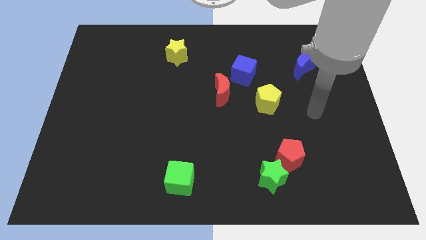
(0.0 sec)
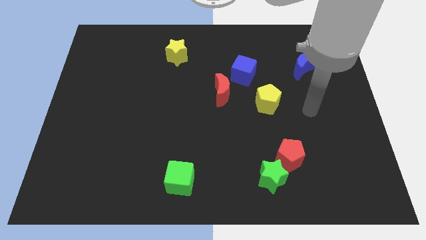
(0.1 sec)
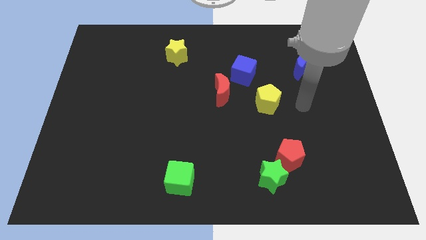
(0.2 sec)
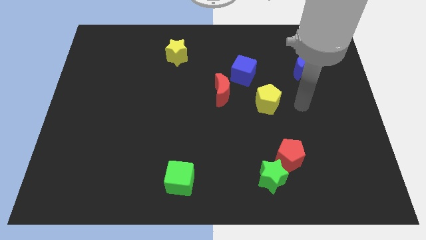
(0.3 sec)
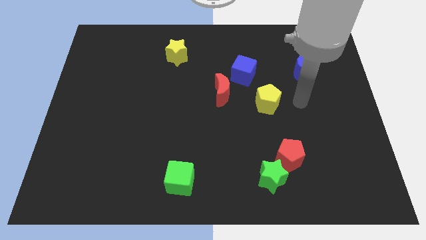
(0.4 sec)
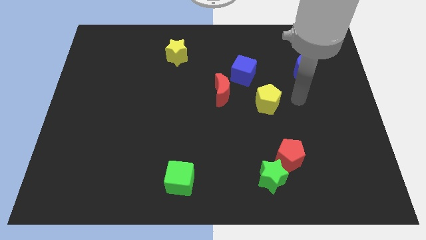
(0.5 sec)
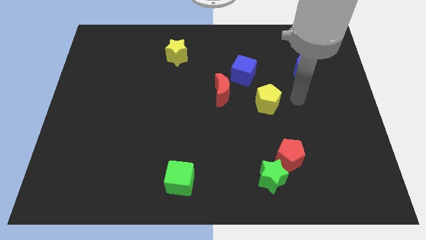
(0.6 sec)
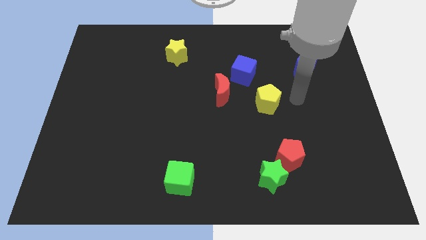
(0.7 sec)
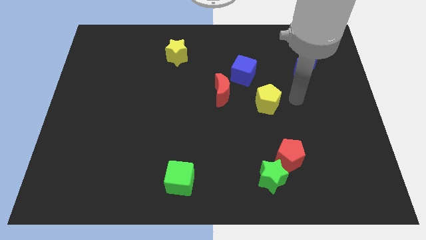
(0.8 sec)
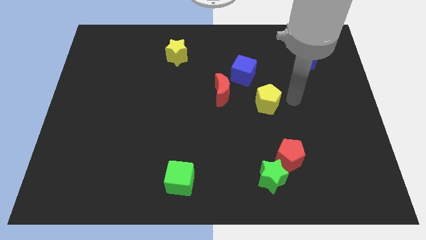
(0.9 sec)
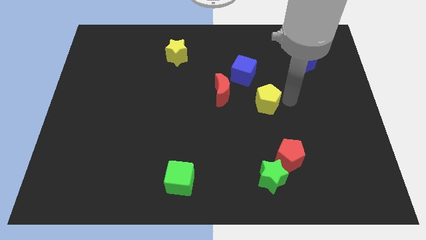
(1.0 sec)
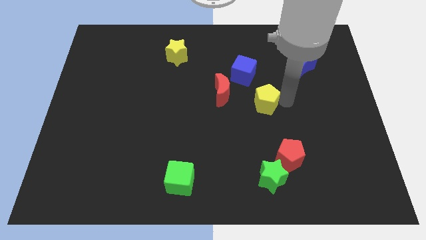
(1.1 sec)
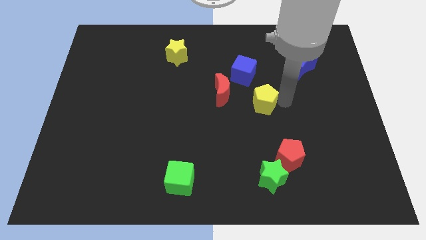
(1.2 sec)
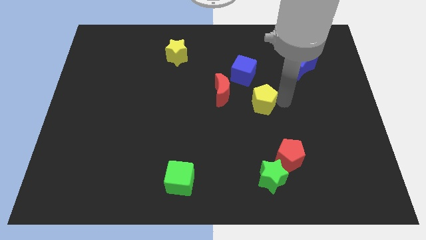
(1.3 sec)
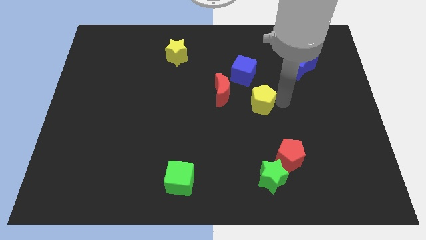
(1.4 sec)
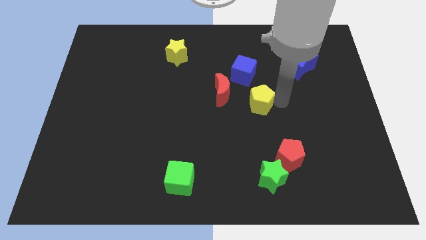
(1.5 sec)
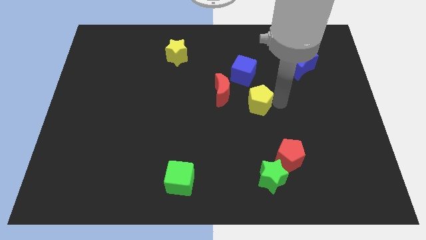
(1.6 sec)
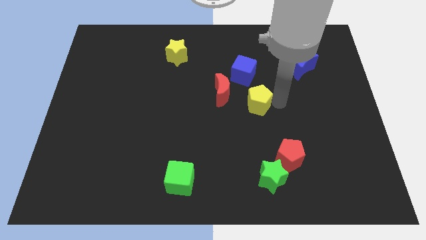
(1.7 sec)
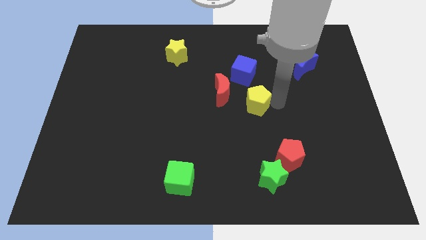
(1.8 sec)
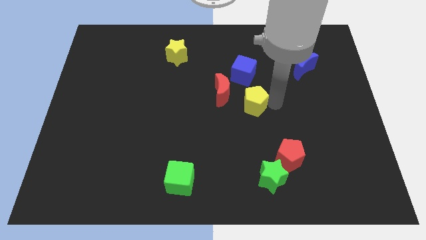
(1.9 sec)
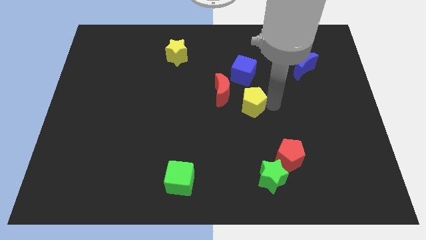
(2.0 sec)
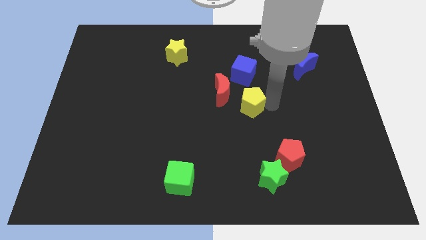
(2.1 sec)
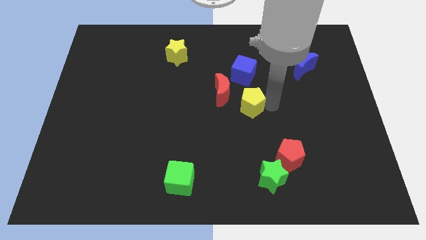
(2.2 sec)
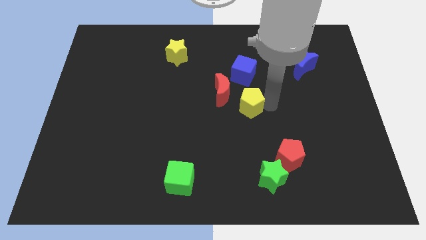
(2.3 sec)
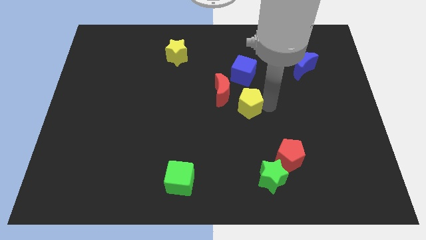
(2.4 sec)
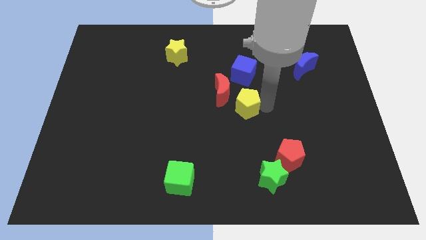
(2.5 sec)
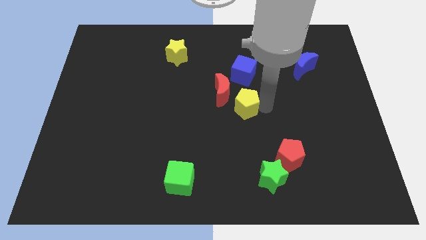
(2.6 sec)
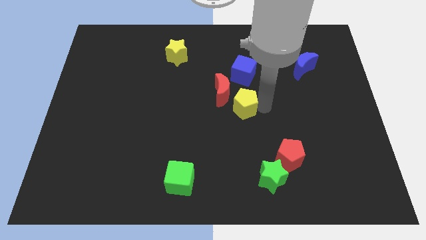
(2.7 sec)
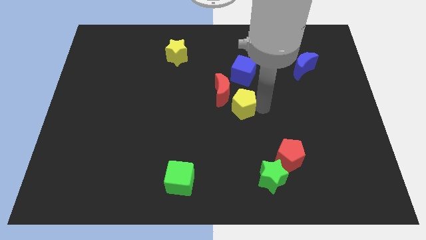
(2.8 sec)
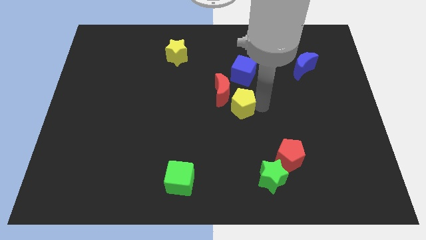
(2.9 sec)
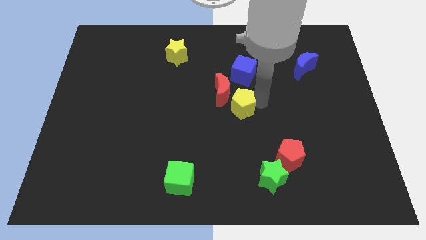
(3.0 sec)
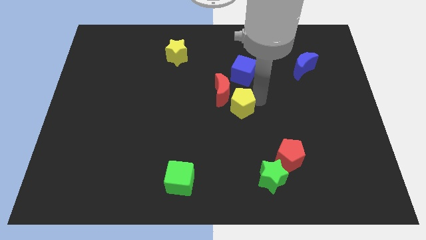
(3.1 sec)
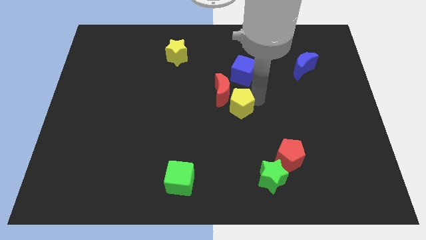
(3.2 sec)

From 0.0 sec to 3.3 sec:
push the yellow pentagon to the bottom of the blue cube

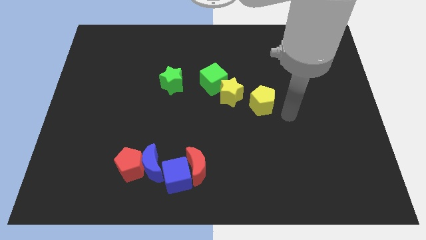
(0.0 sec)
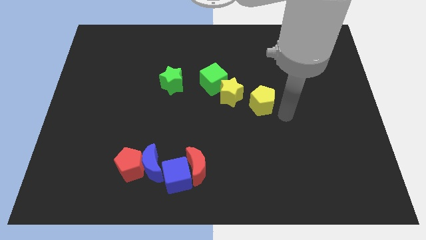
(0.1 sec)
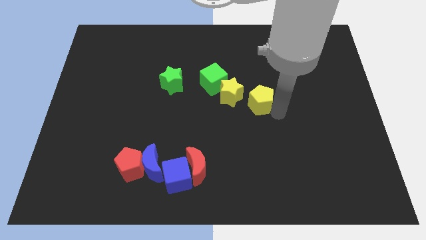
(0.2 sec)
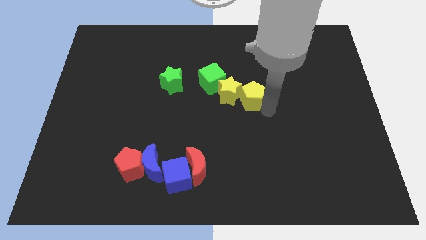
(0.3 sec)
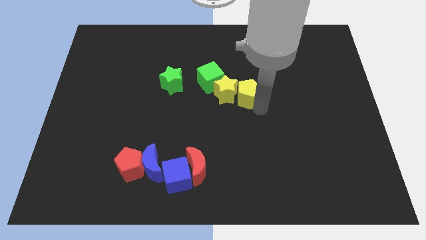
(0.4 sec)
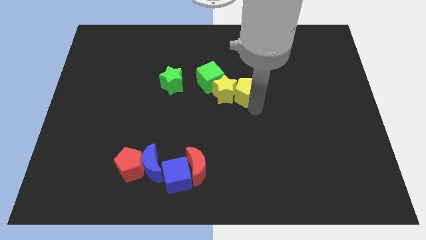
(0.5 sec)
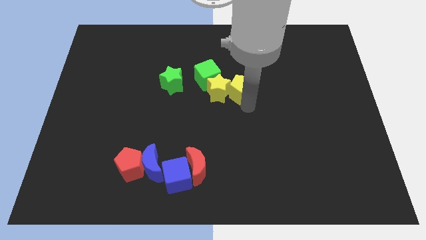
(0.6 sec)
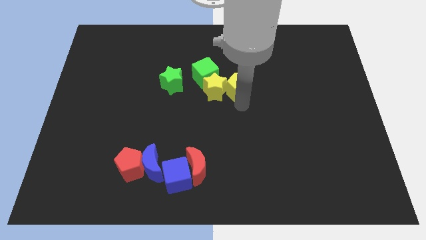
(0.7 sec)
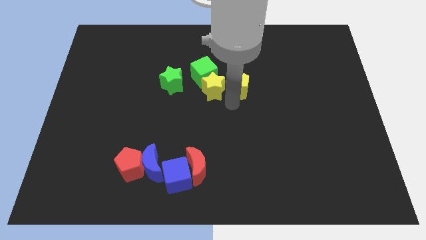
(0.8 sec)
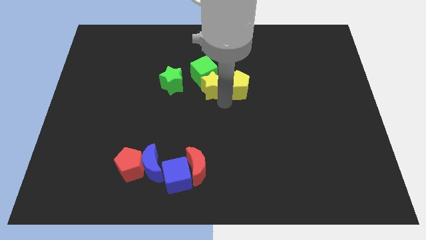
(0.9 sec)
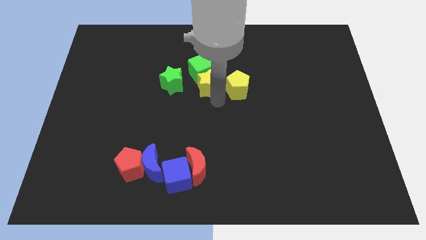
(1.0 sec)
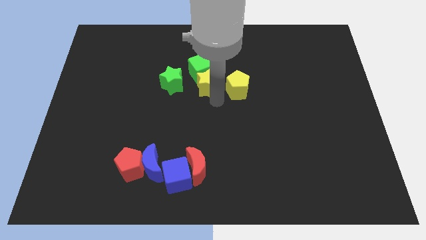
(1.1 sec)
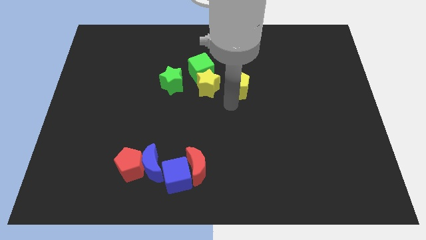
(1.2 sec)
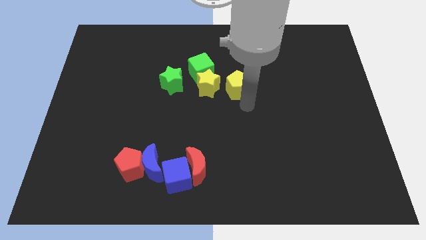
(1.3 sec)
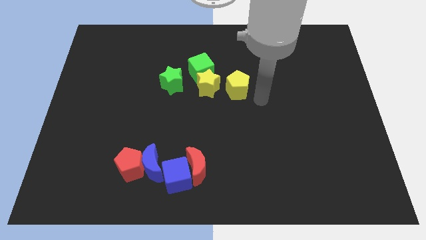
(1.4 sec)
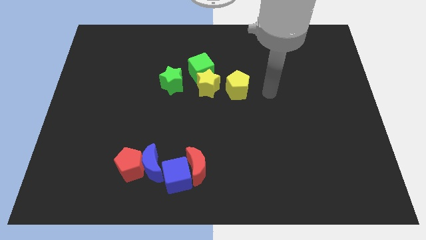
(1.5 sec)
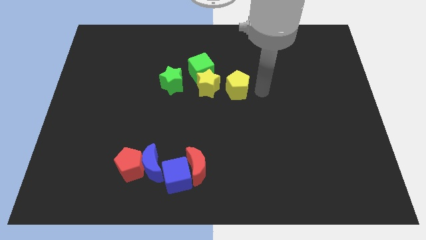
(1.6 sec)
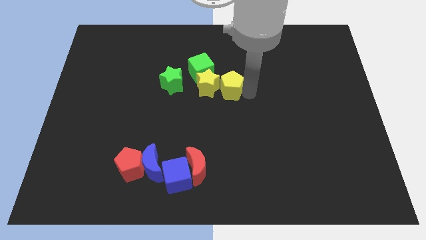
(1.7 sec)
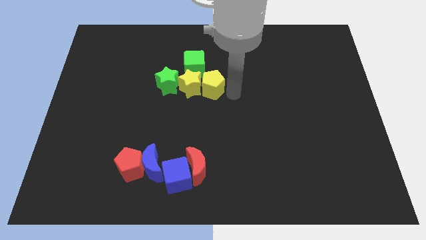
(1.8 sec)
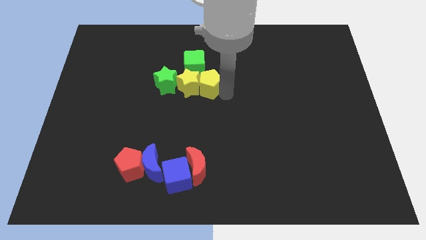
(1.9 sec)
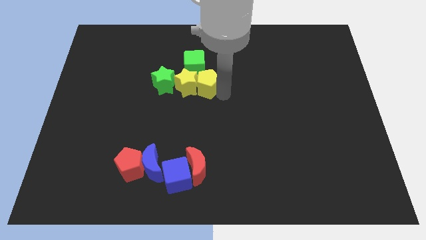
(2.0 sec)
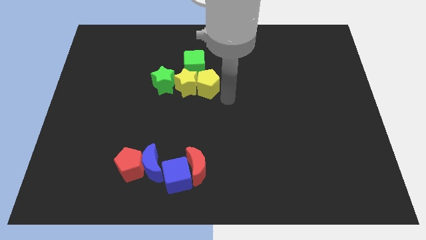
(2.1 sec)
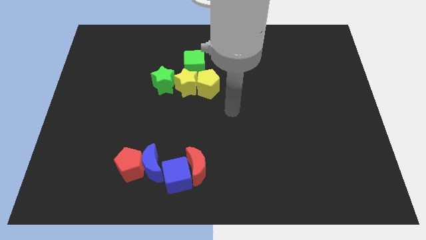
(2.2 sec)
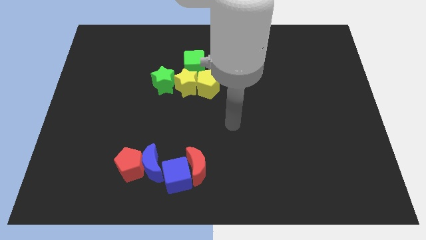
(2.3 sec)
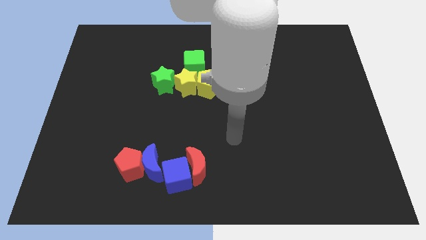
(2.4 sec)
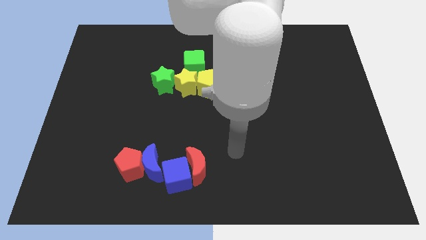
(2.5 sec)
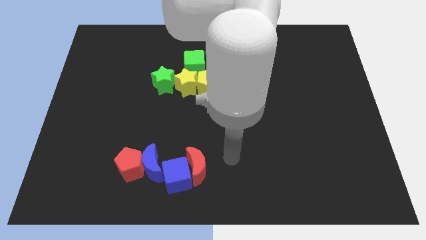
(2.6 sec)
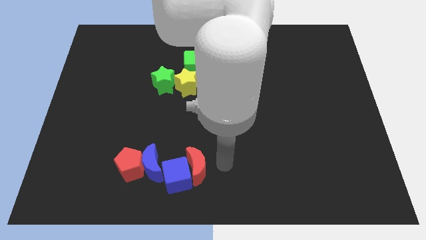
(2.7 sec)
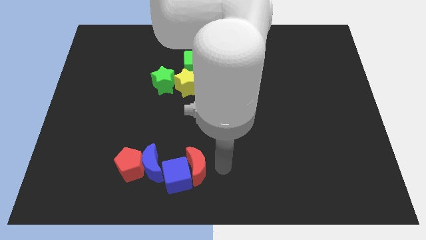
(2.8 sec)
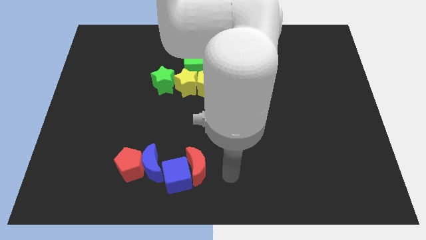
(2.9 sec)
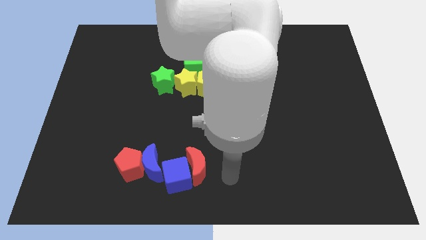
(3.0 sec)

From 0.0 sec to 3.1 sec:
push the yellow and green blocks together to form a group above the red and blue blocks

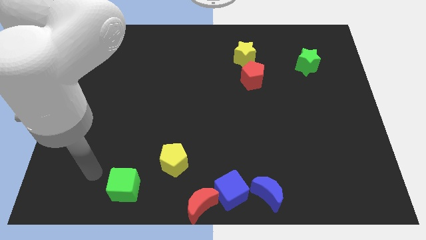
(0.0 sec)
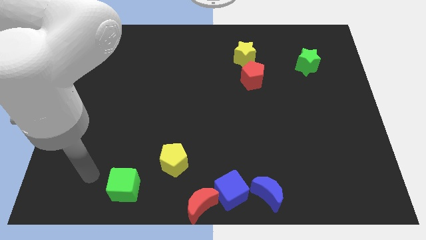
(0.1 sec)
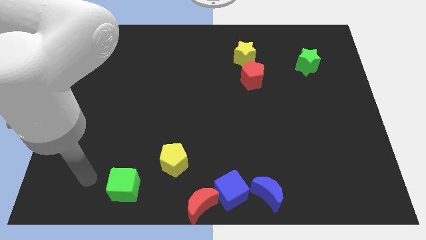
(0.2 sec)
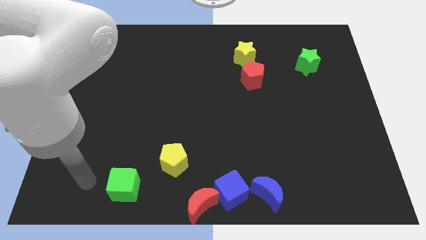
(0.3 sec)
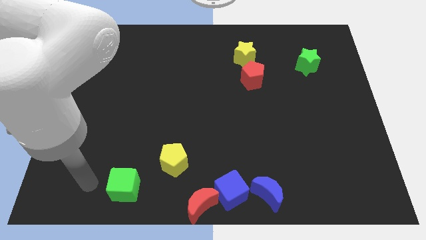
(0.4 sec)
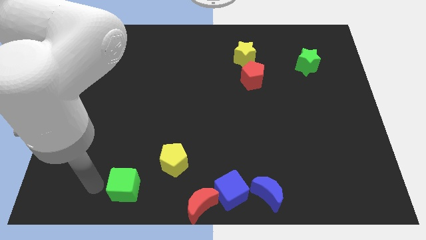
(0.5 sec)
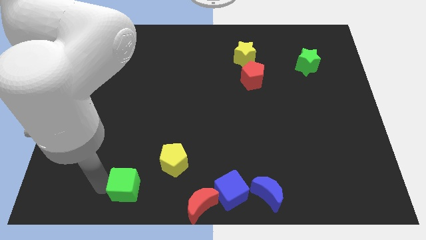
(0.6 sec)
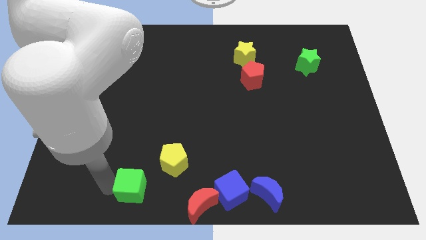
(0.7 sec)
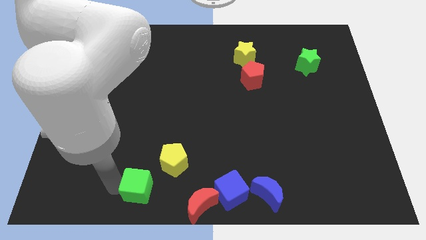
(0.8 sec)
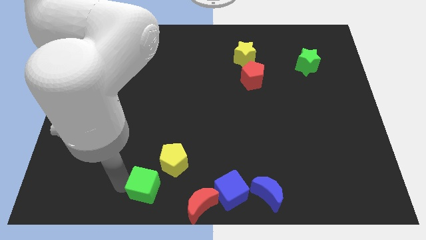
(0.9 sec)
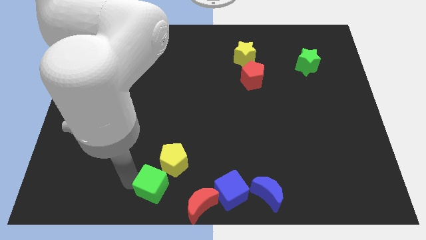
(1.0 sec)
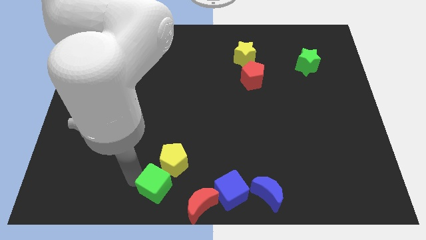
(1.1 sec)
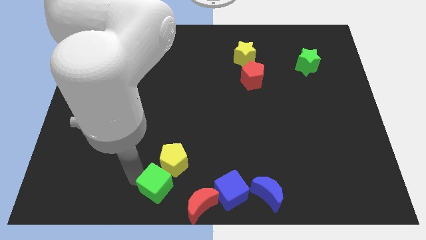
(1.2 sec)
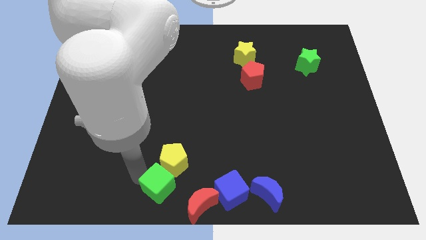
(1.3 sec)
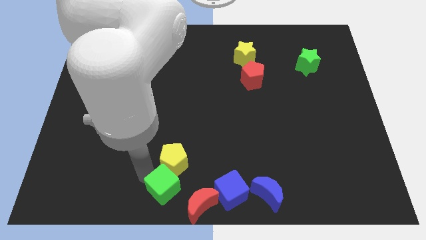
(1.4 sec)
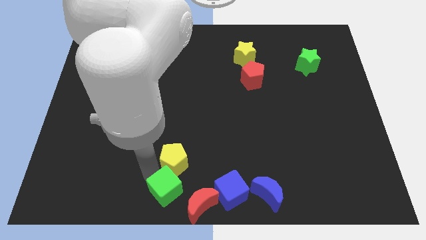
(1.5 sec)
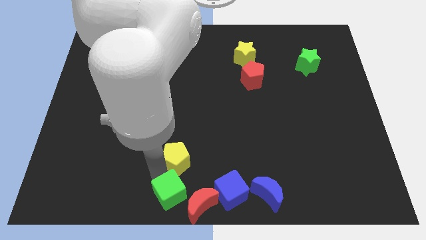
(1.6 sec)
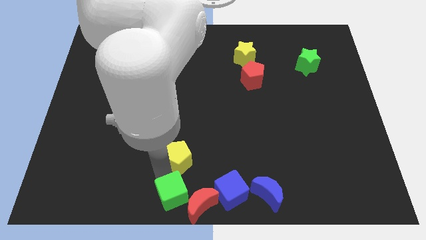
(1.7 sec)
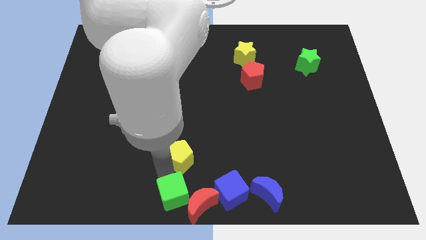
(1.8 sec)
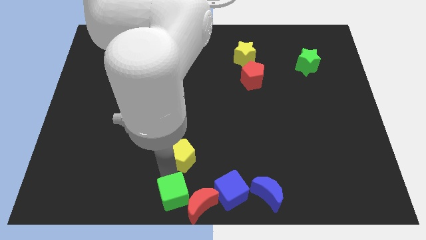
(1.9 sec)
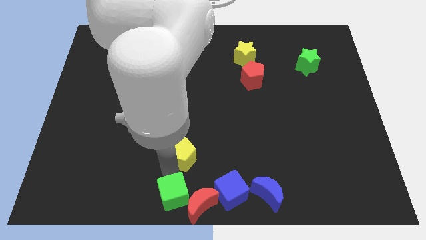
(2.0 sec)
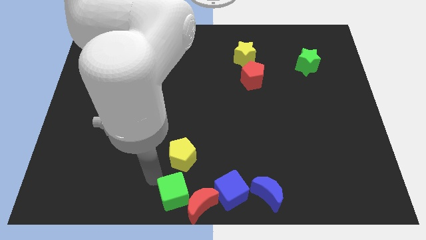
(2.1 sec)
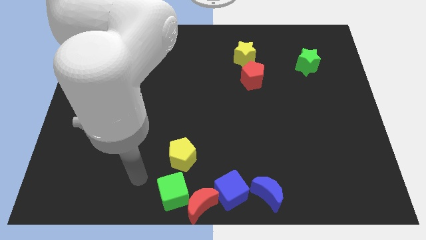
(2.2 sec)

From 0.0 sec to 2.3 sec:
place the green cube left to the red crescent

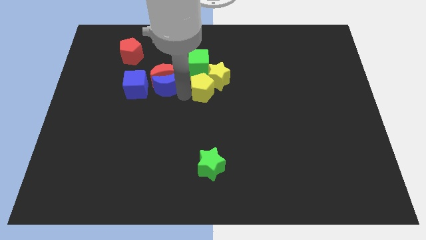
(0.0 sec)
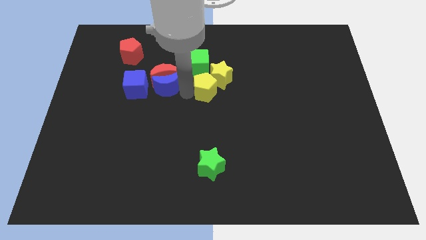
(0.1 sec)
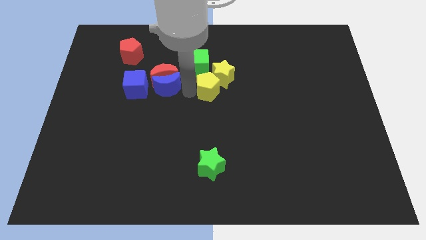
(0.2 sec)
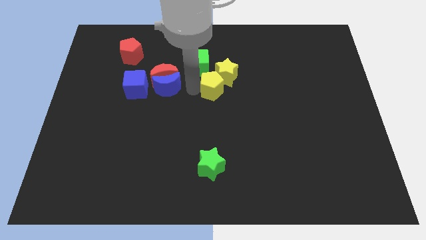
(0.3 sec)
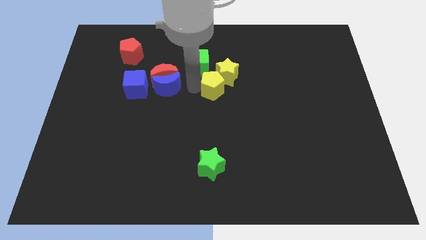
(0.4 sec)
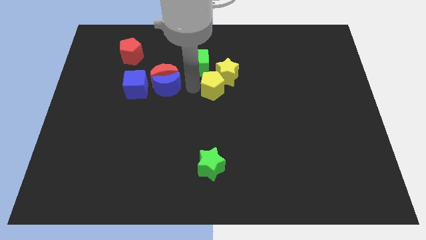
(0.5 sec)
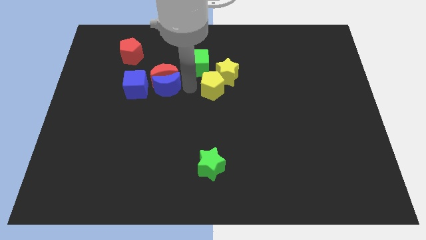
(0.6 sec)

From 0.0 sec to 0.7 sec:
push the yellow pentagon into the yellow star
